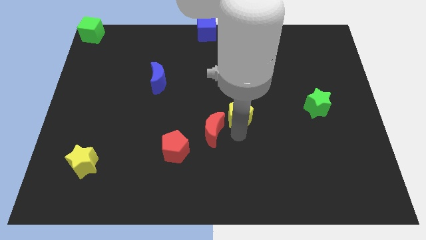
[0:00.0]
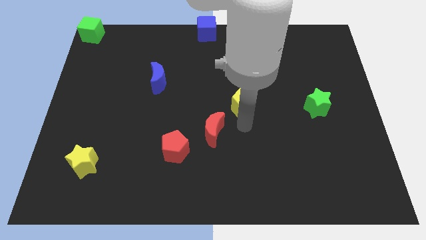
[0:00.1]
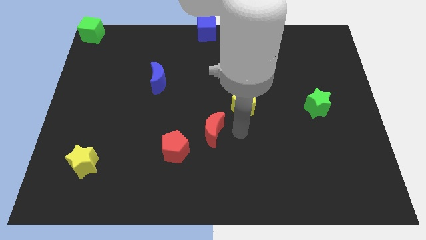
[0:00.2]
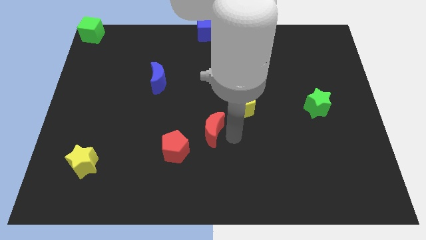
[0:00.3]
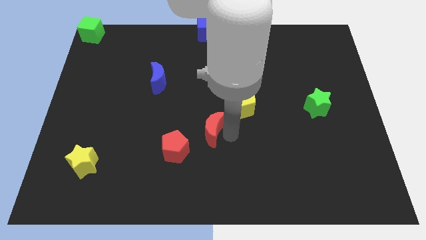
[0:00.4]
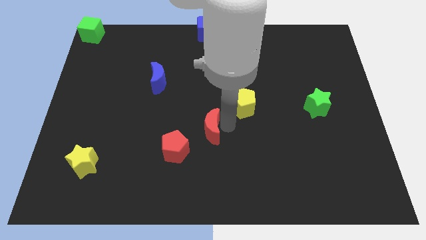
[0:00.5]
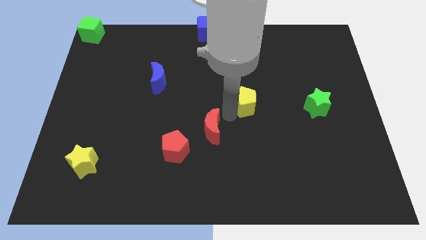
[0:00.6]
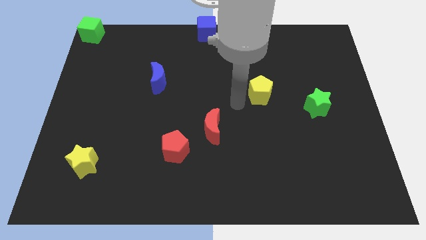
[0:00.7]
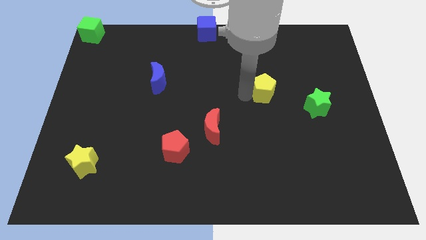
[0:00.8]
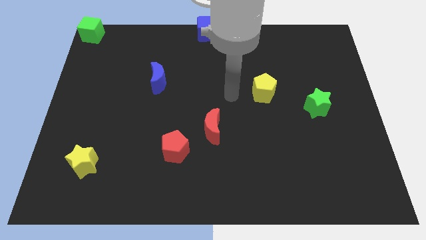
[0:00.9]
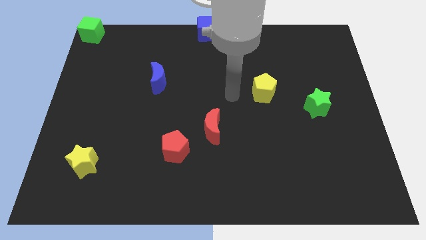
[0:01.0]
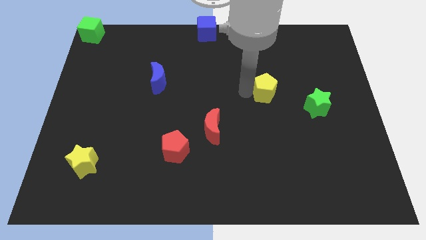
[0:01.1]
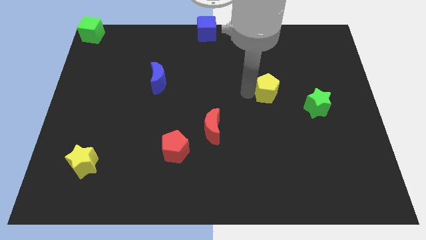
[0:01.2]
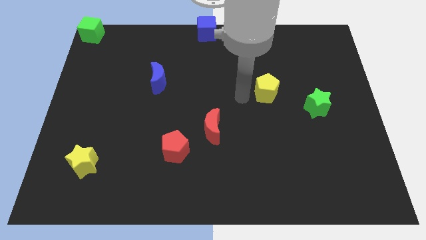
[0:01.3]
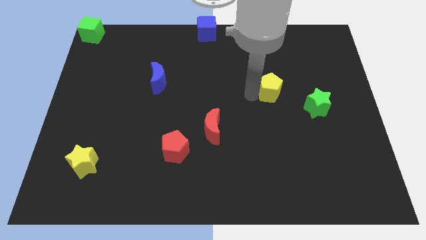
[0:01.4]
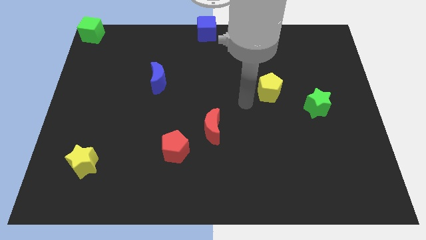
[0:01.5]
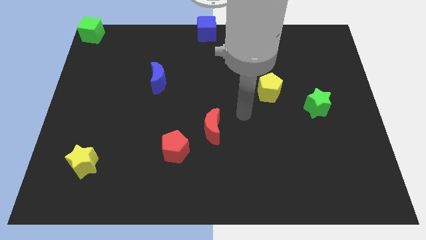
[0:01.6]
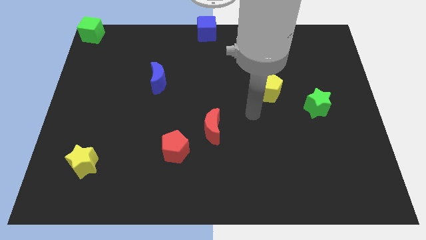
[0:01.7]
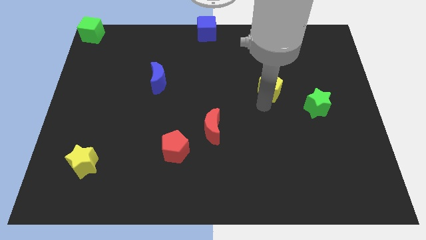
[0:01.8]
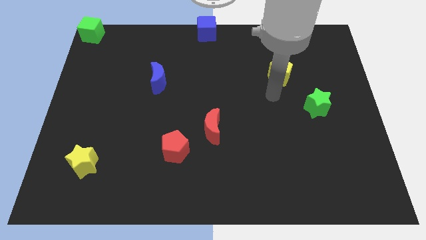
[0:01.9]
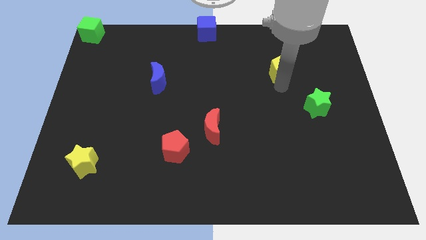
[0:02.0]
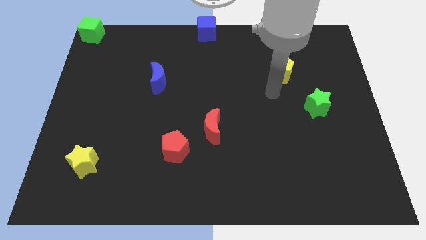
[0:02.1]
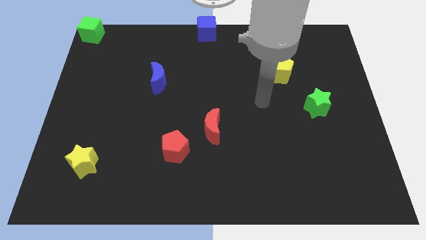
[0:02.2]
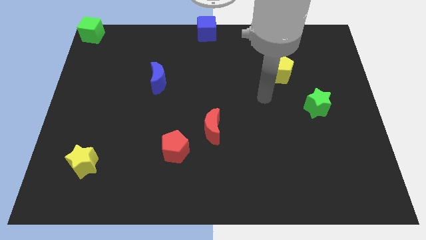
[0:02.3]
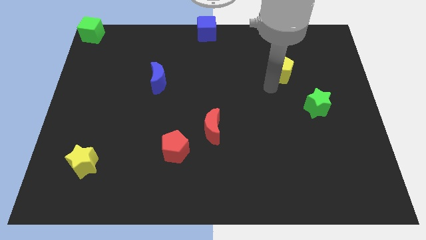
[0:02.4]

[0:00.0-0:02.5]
push the yellow pentagon towards top right corner of the board

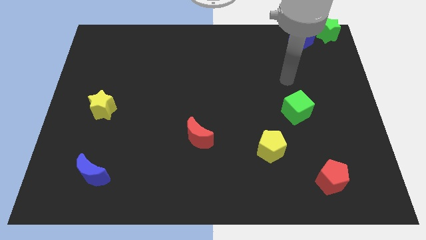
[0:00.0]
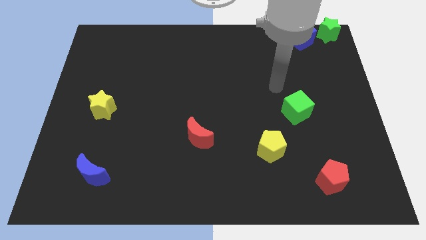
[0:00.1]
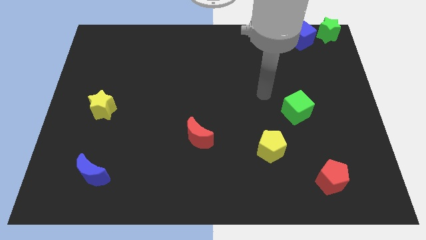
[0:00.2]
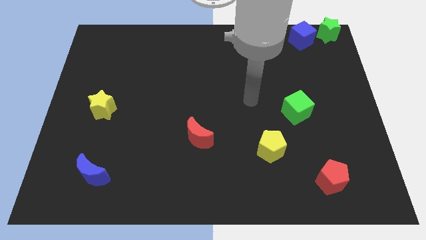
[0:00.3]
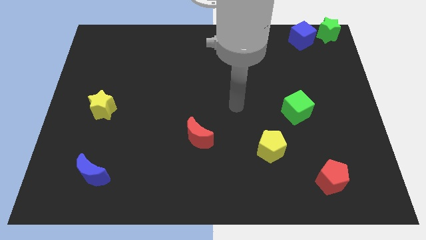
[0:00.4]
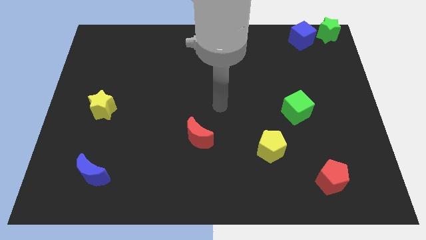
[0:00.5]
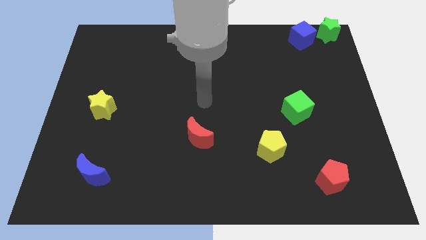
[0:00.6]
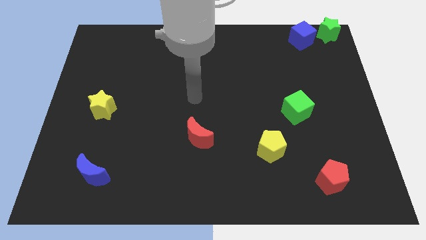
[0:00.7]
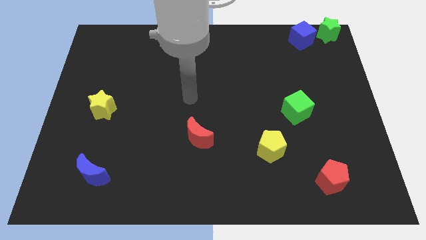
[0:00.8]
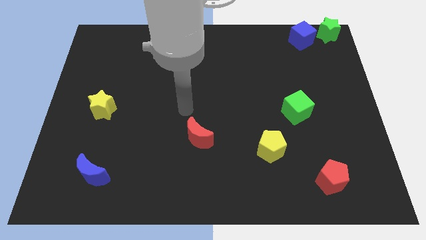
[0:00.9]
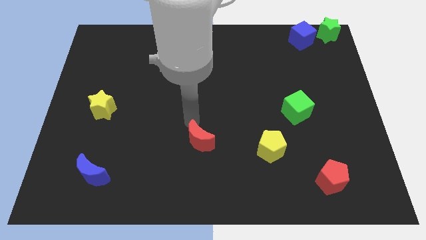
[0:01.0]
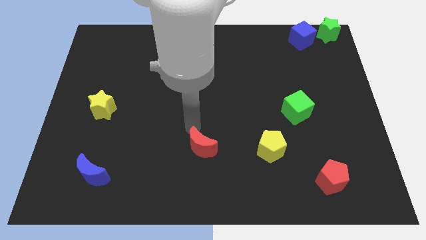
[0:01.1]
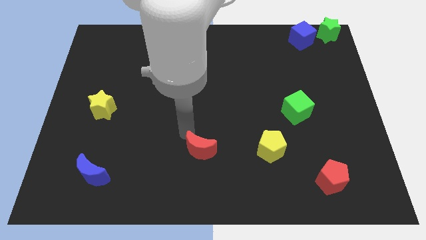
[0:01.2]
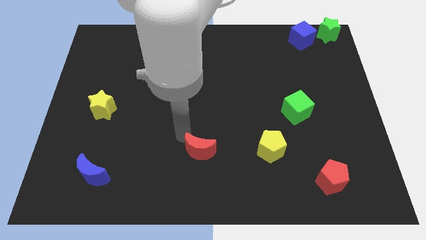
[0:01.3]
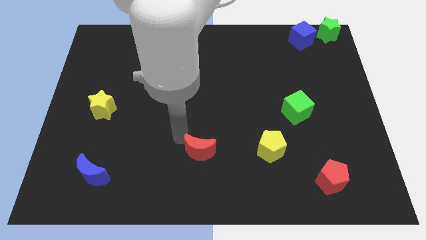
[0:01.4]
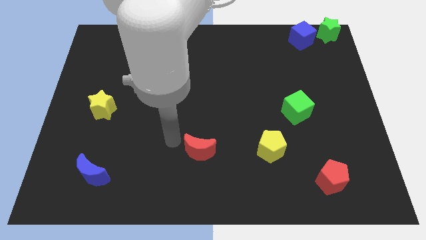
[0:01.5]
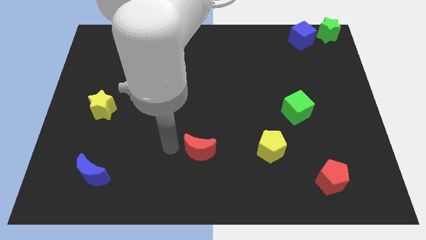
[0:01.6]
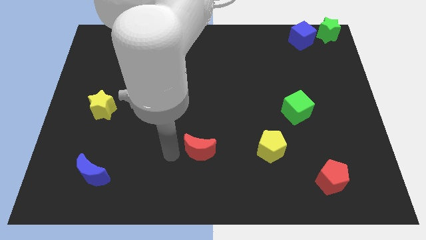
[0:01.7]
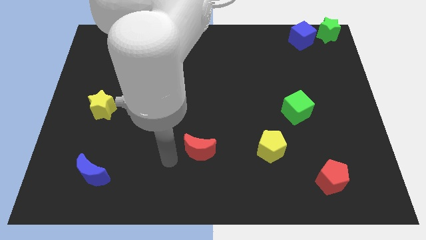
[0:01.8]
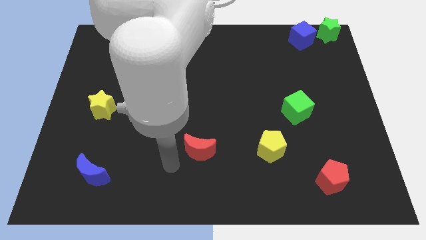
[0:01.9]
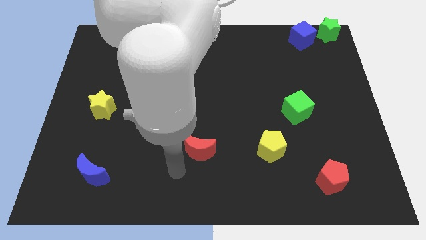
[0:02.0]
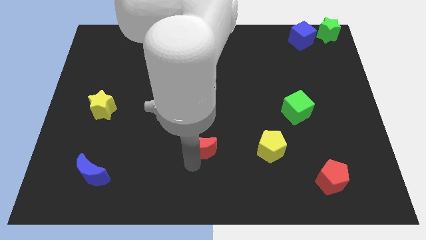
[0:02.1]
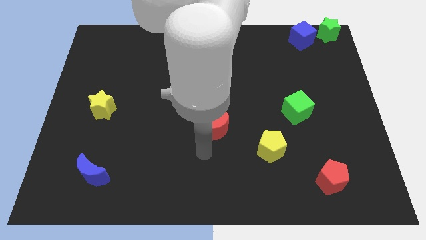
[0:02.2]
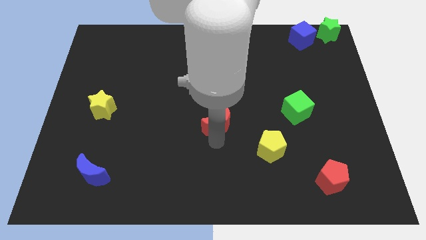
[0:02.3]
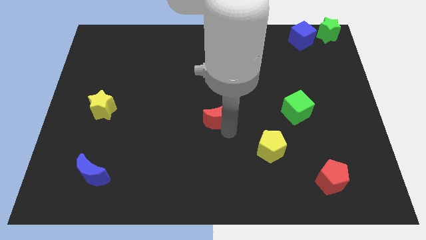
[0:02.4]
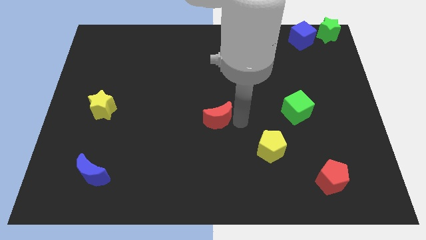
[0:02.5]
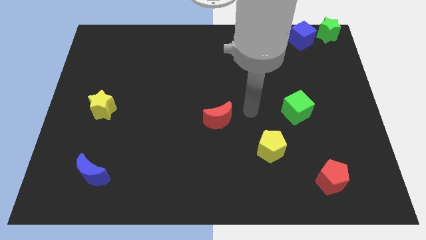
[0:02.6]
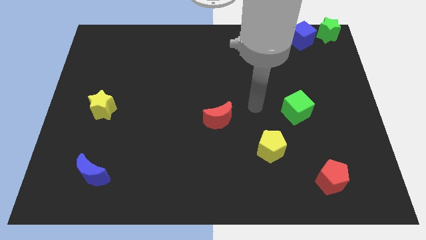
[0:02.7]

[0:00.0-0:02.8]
place red crescent slightly towards top

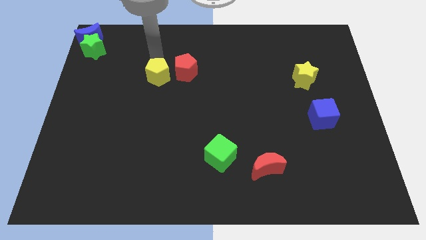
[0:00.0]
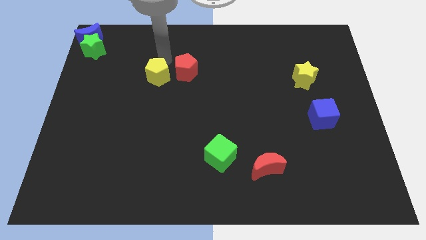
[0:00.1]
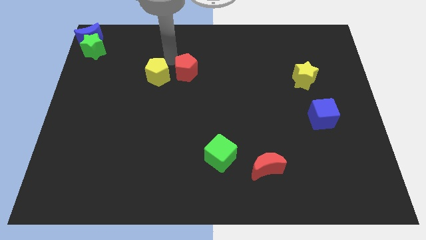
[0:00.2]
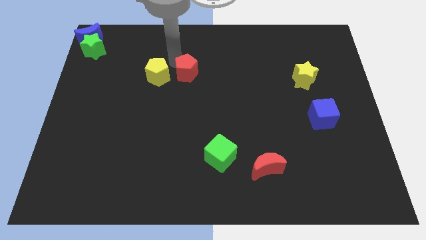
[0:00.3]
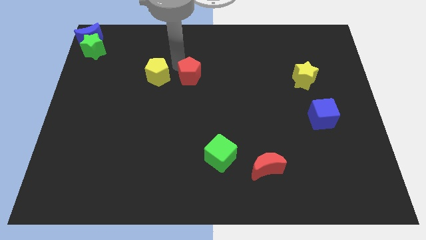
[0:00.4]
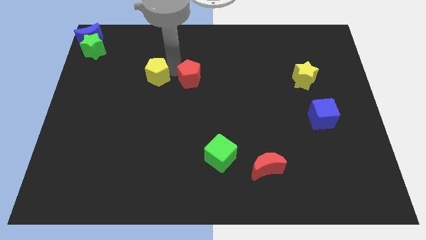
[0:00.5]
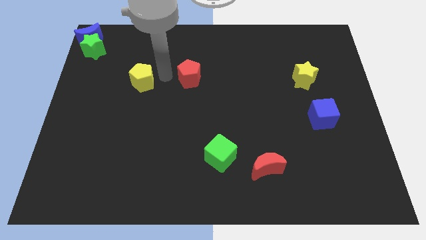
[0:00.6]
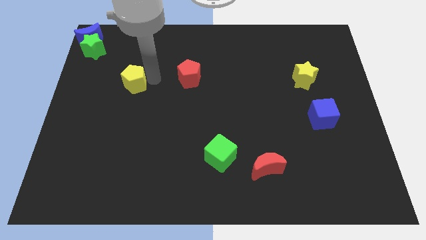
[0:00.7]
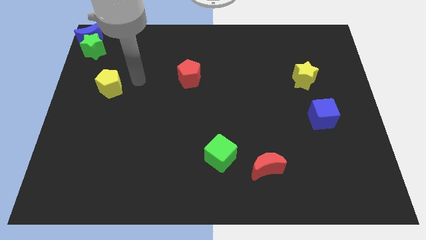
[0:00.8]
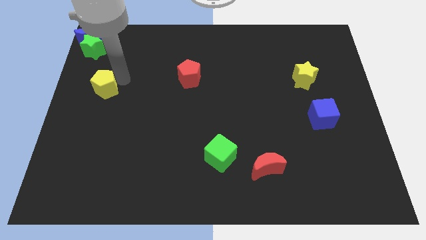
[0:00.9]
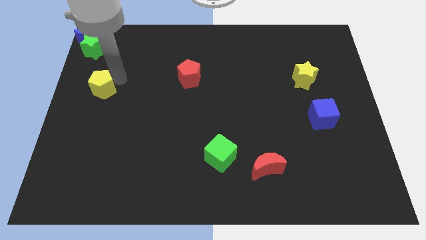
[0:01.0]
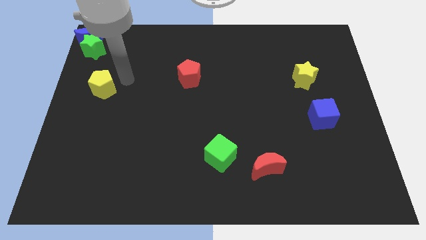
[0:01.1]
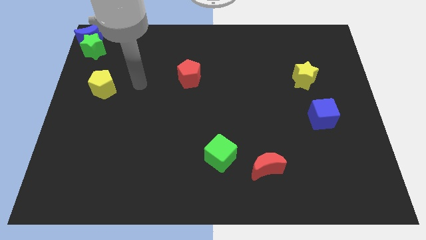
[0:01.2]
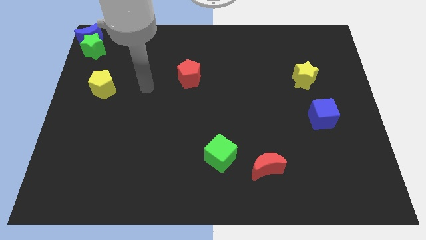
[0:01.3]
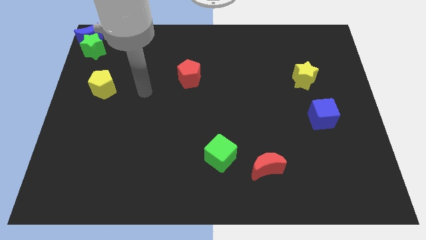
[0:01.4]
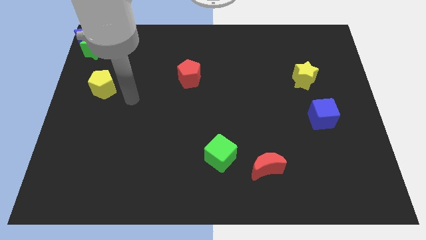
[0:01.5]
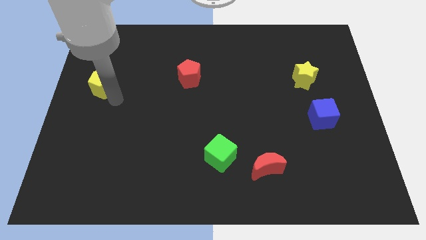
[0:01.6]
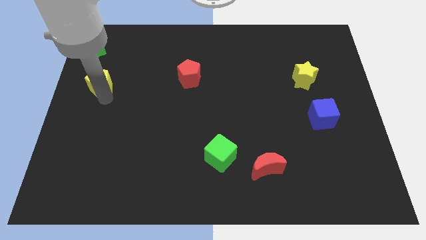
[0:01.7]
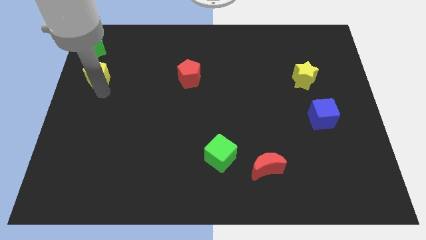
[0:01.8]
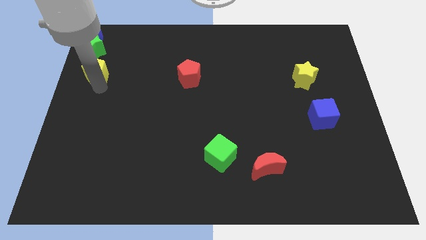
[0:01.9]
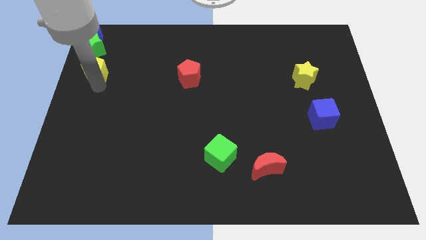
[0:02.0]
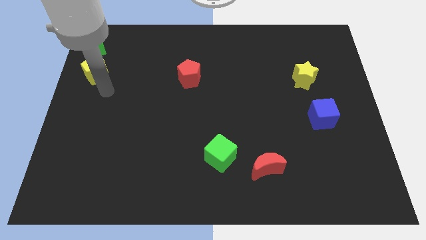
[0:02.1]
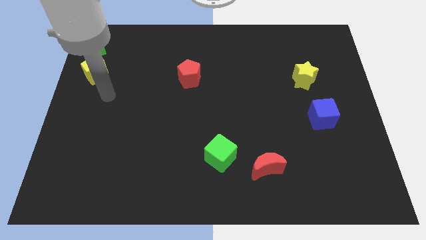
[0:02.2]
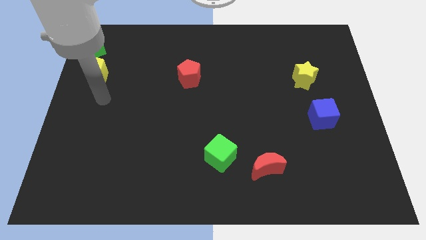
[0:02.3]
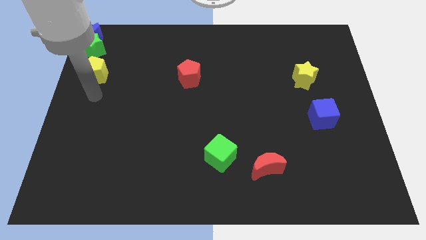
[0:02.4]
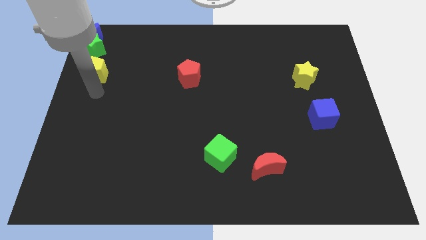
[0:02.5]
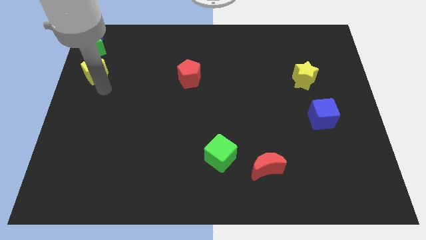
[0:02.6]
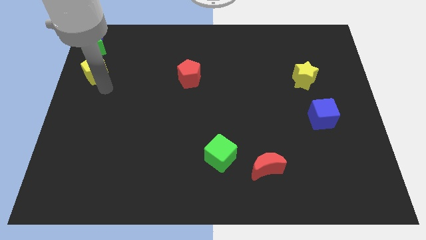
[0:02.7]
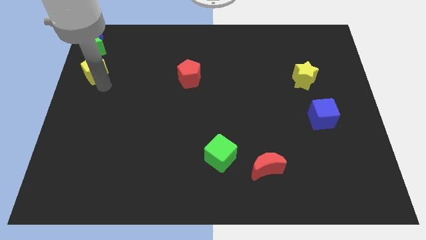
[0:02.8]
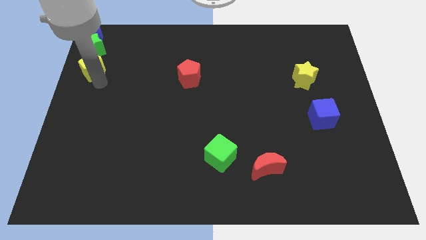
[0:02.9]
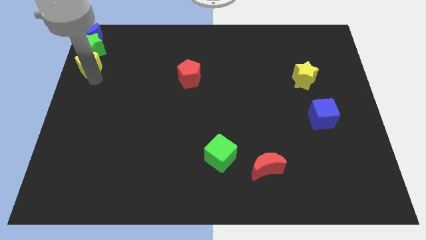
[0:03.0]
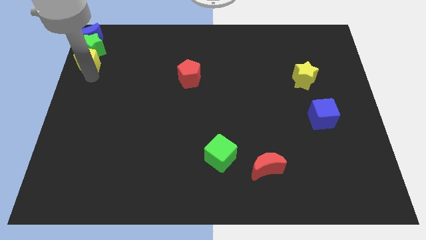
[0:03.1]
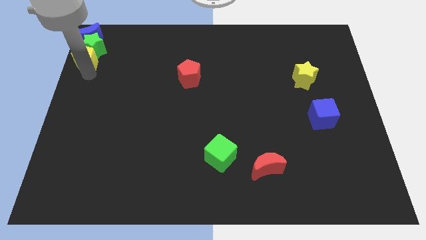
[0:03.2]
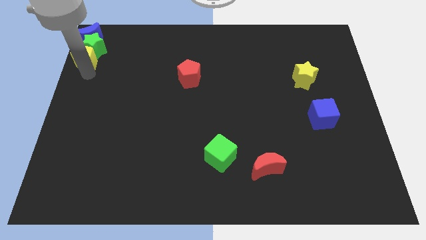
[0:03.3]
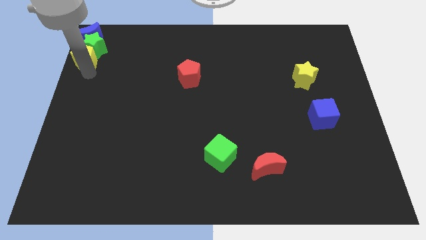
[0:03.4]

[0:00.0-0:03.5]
move the yellow pentagon to the bottom side of the green star
